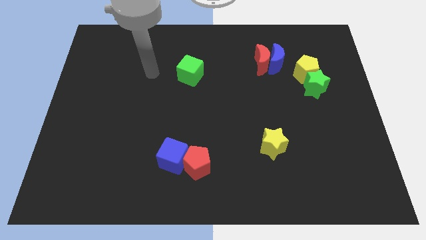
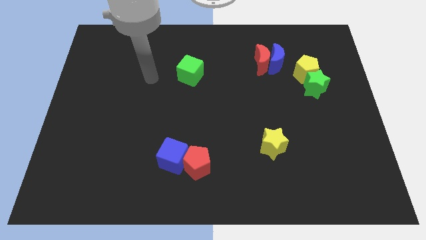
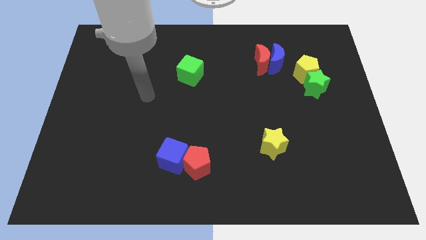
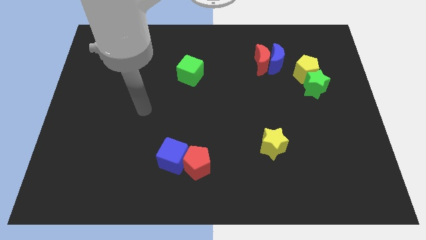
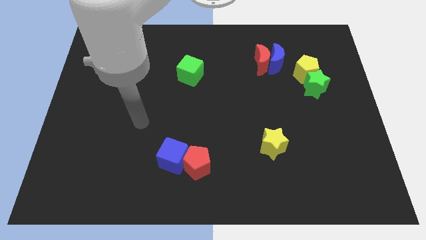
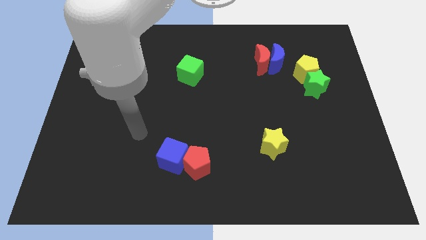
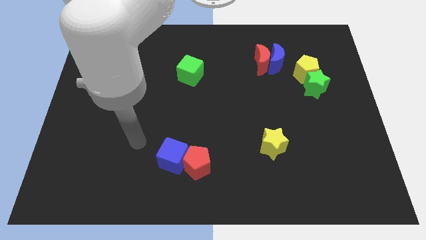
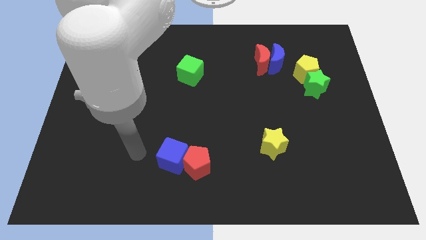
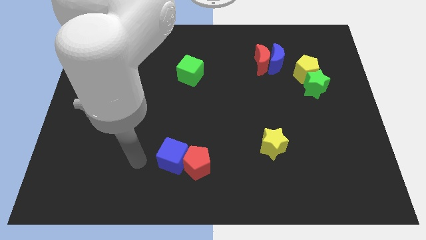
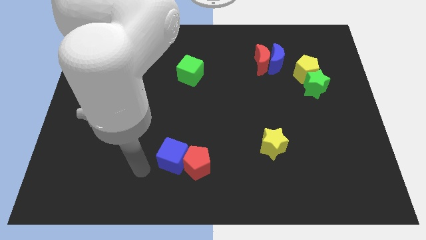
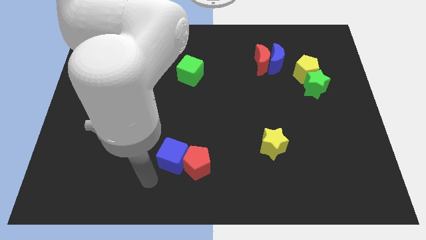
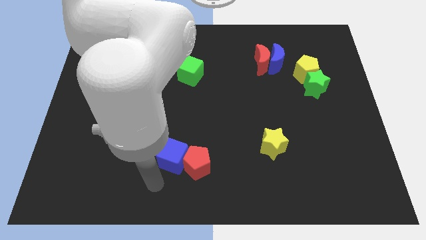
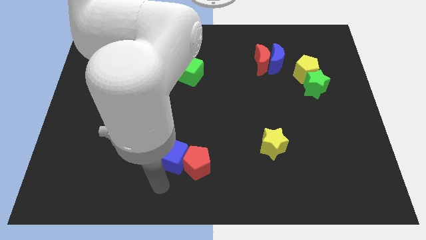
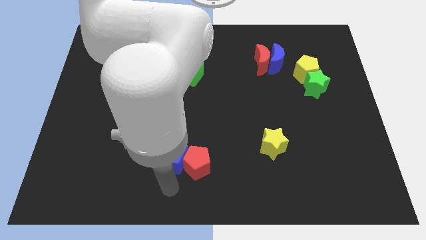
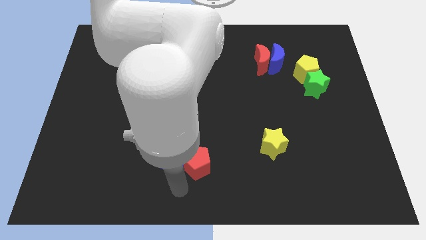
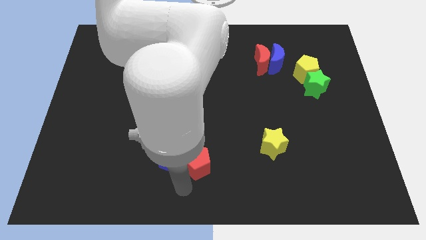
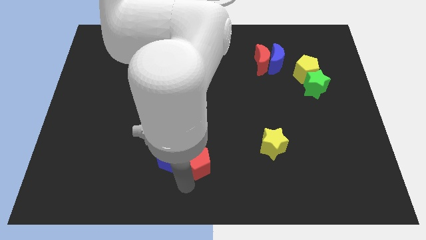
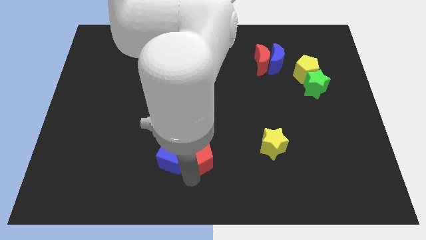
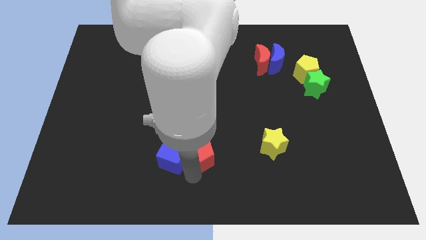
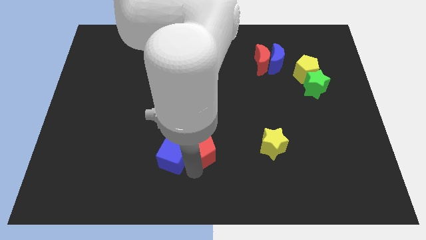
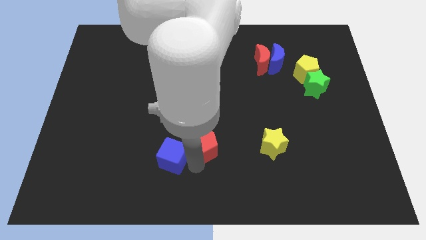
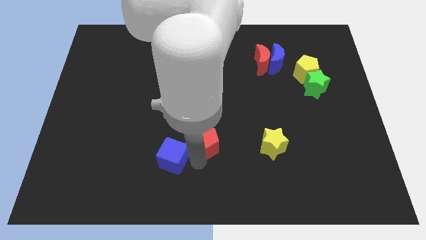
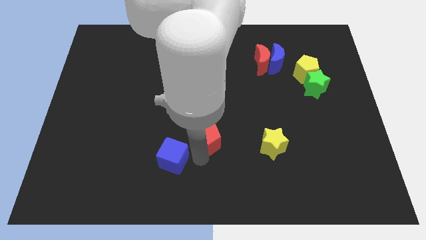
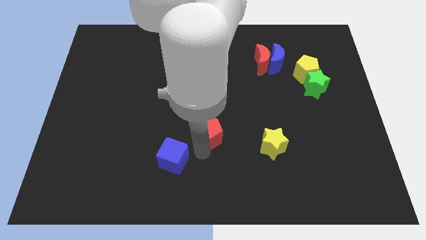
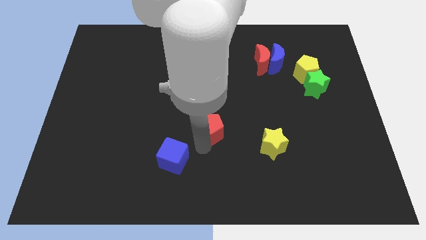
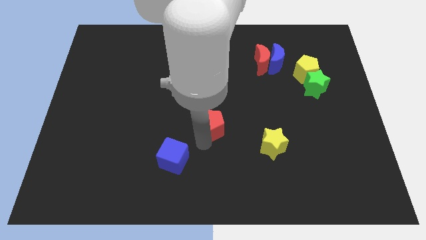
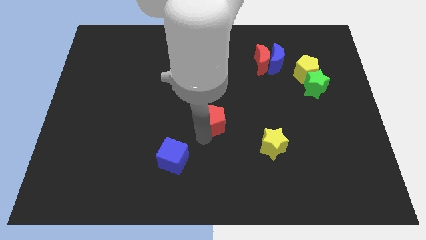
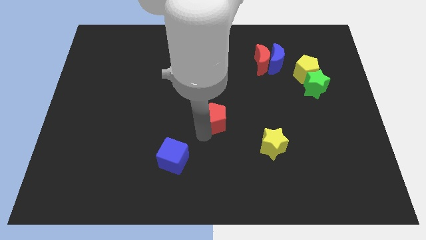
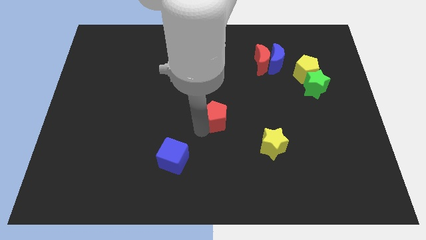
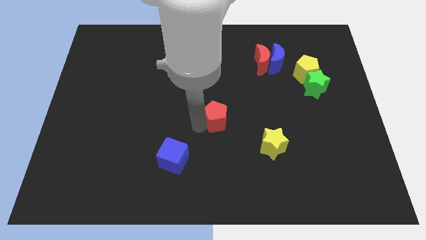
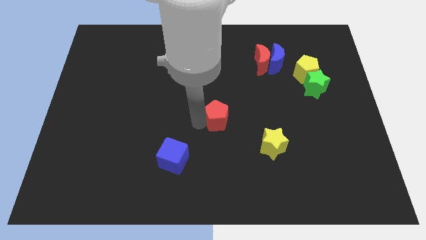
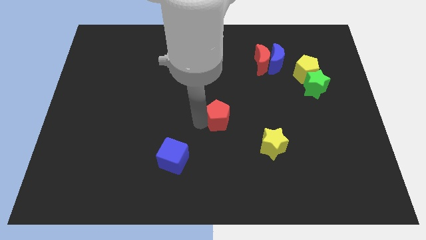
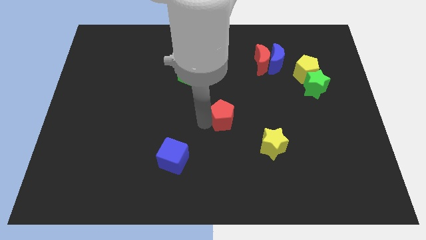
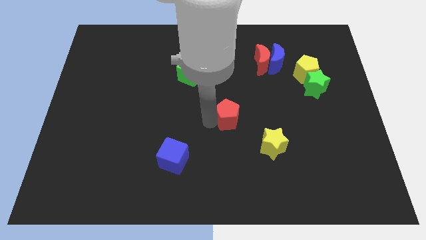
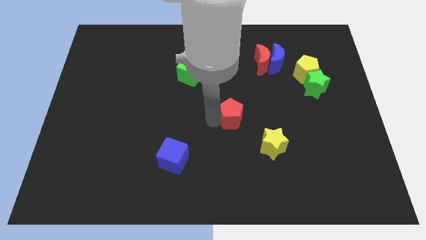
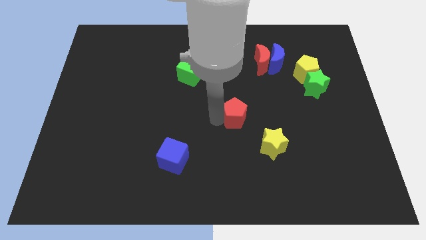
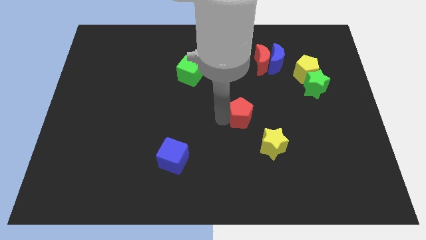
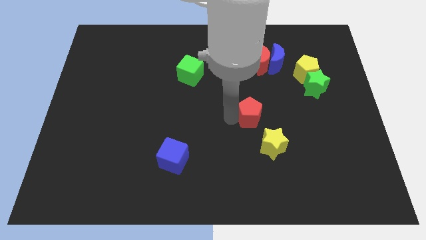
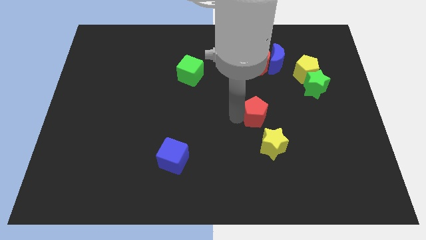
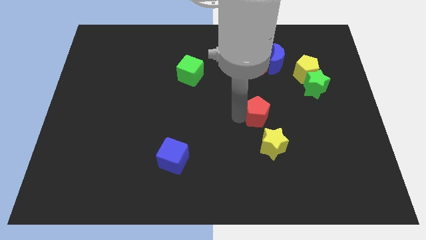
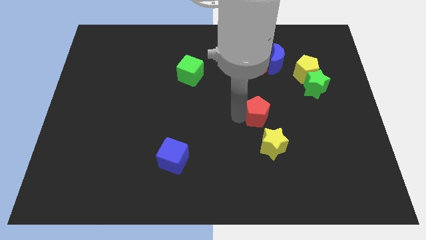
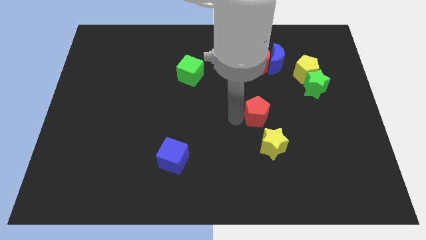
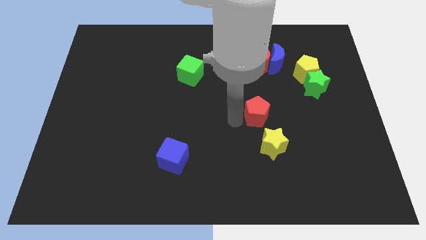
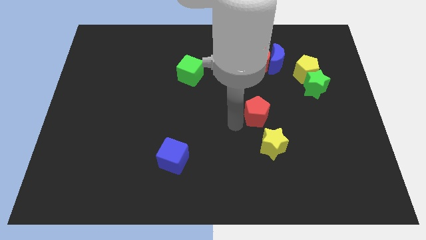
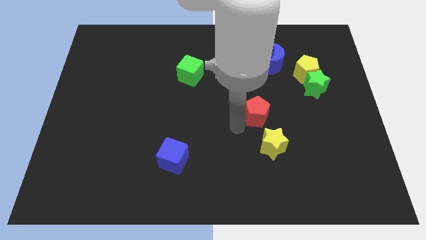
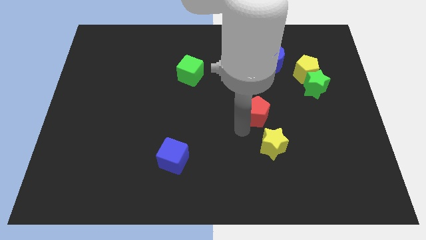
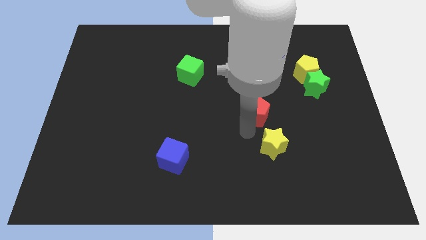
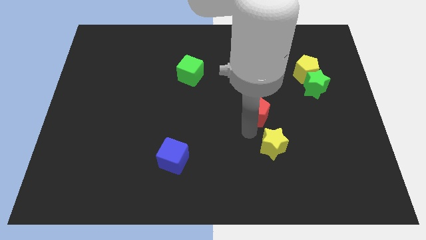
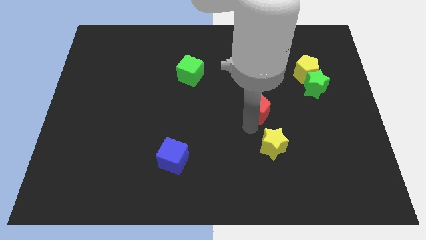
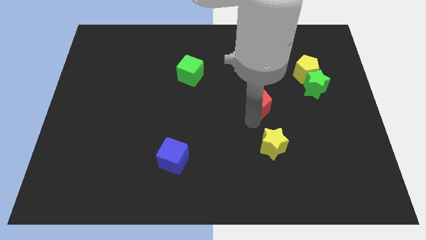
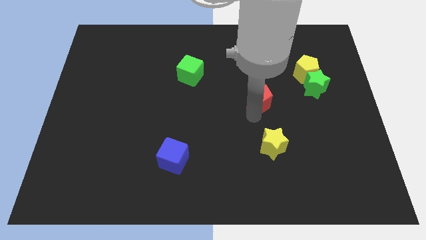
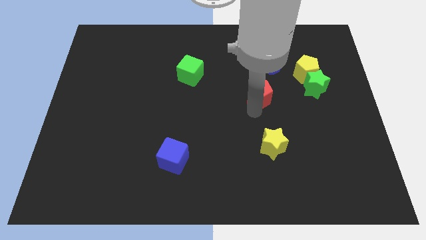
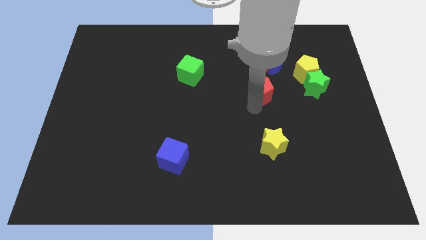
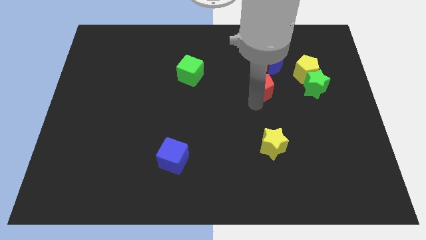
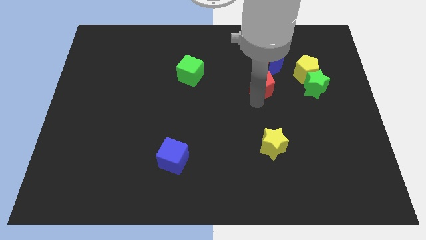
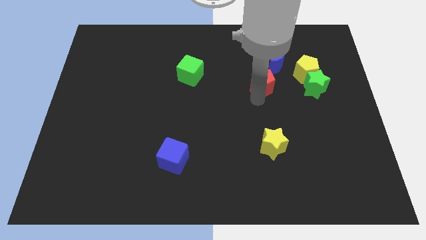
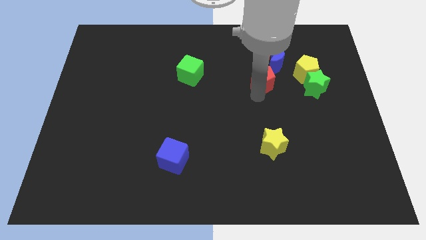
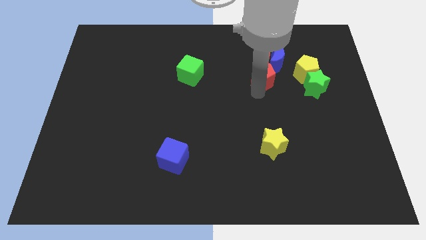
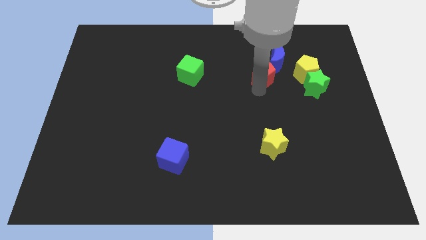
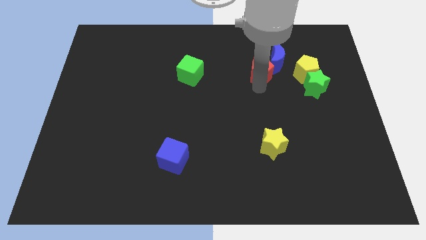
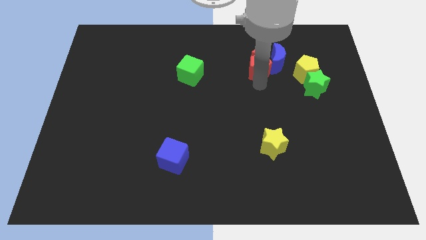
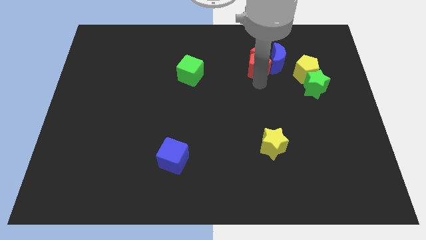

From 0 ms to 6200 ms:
push the red pentagon towards the blue moon

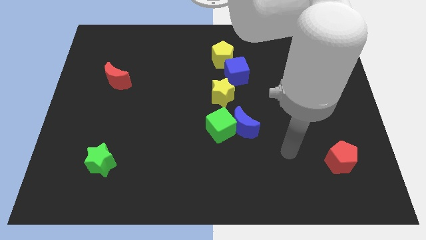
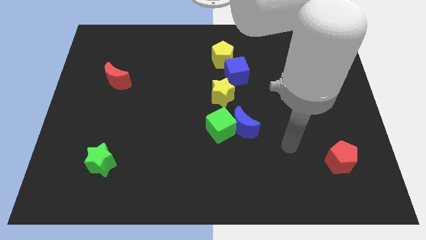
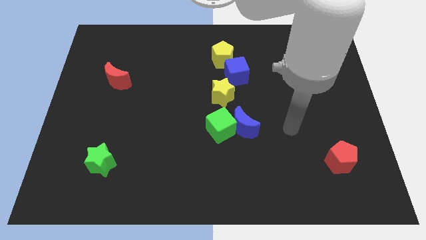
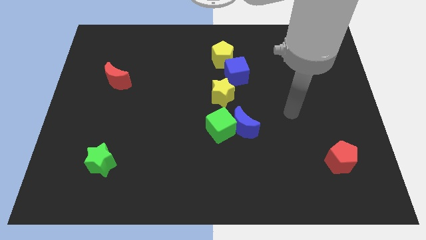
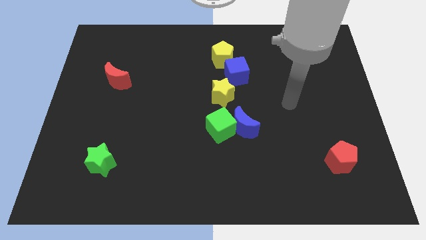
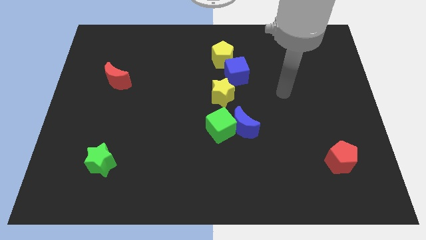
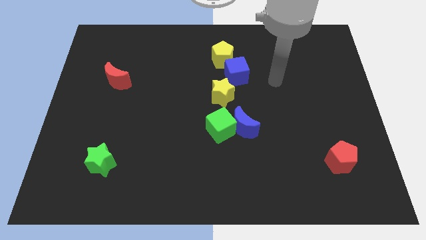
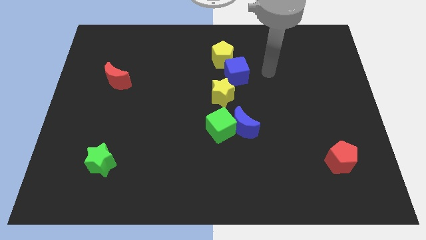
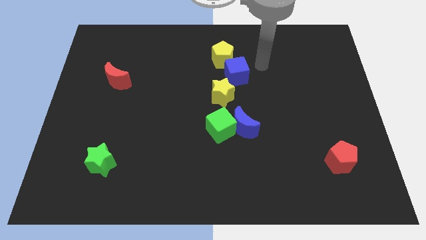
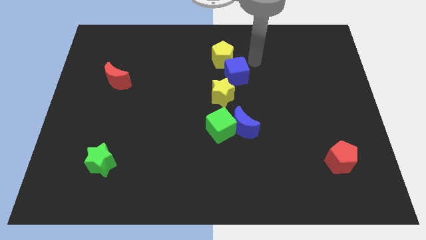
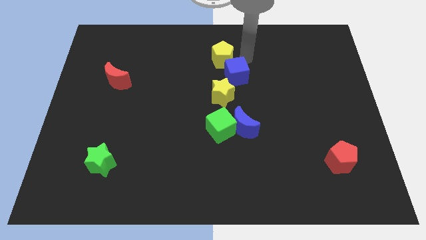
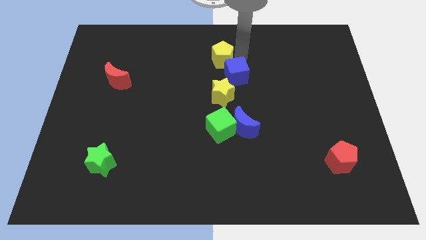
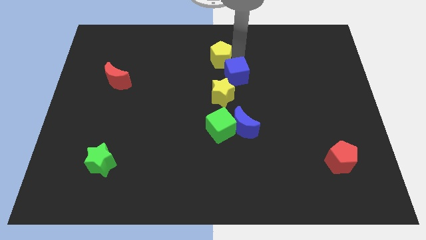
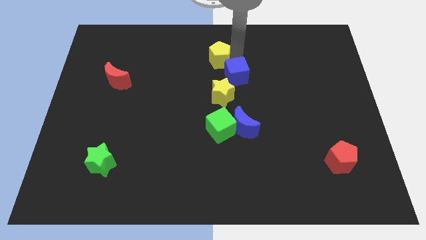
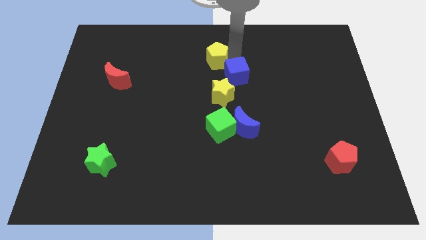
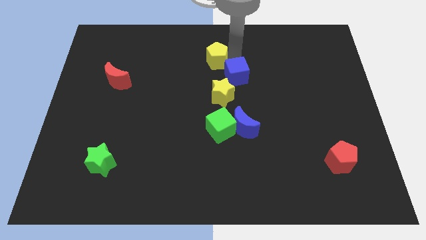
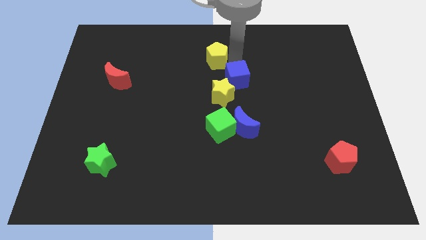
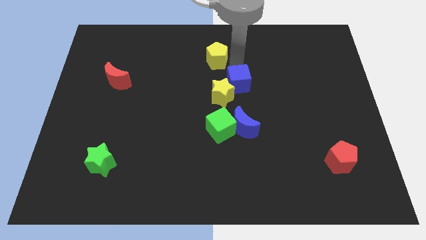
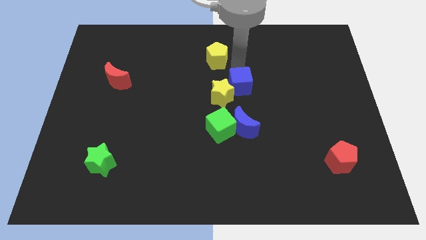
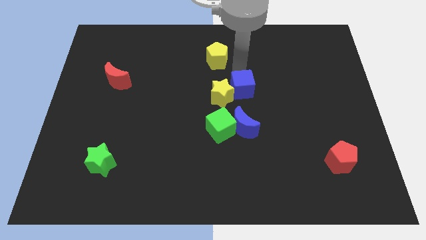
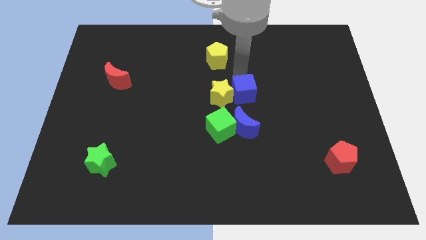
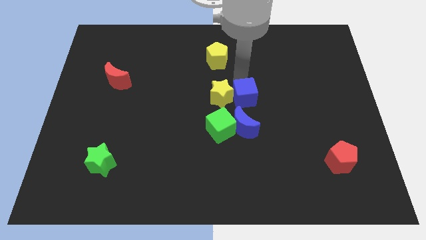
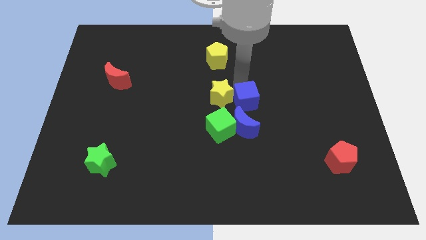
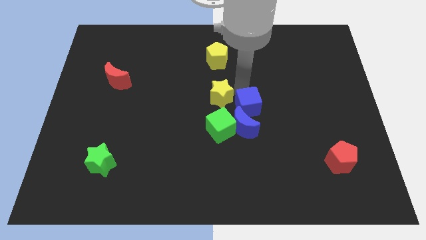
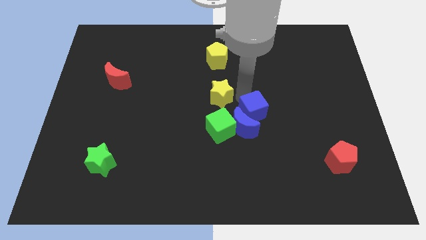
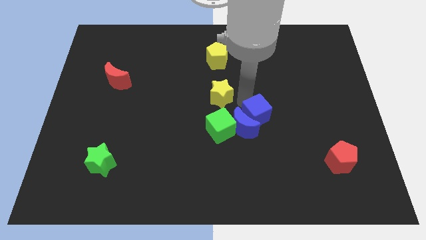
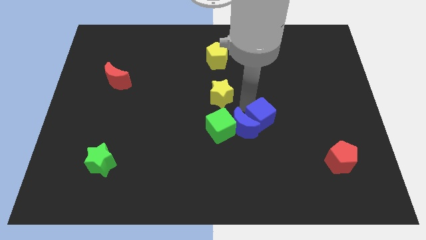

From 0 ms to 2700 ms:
push the blue cube to the blue moon
